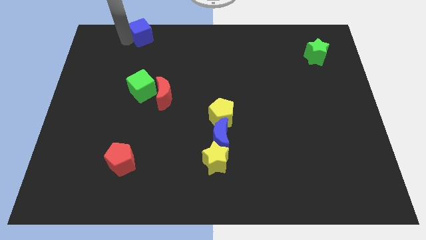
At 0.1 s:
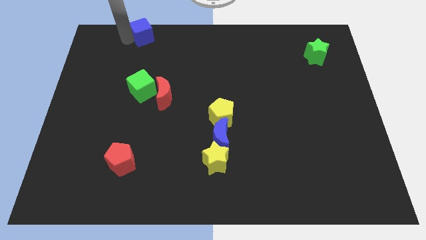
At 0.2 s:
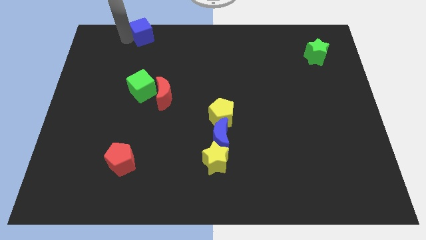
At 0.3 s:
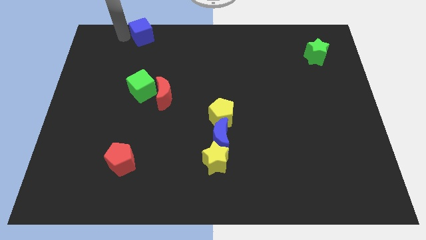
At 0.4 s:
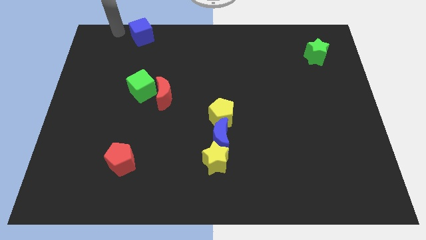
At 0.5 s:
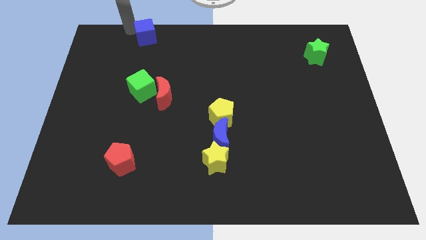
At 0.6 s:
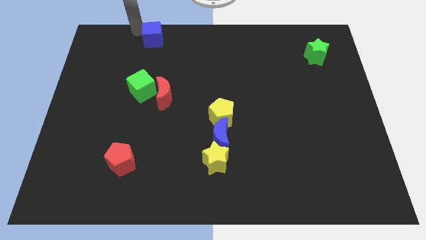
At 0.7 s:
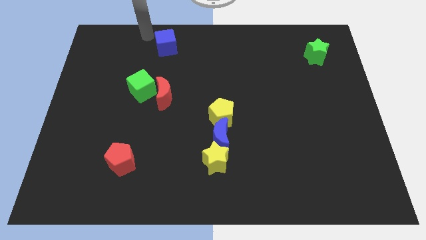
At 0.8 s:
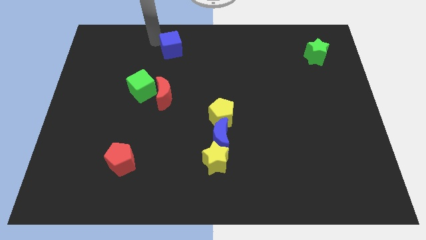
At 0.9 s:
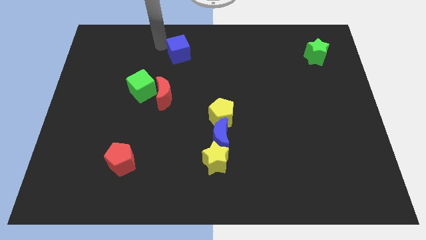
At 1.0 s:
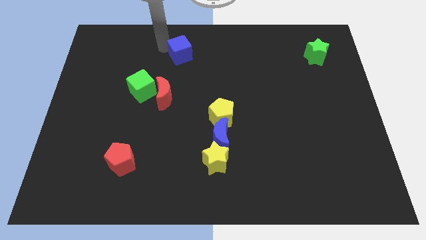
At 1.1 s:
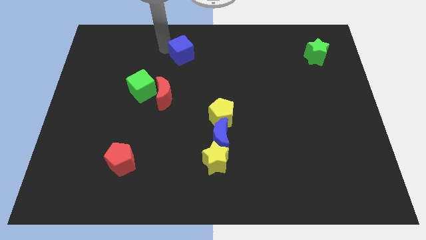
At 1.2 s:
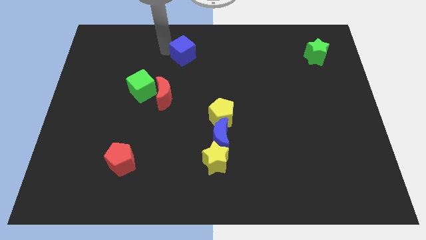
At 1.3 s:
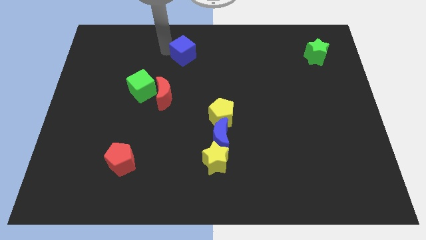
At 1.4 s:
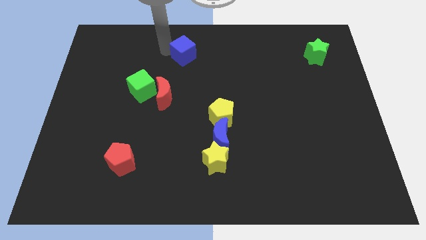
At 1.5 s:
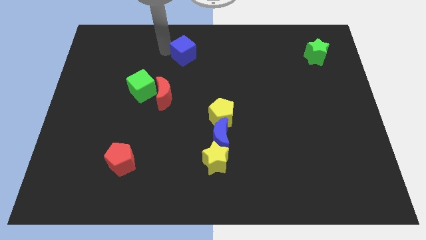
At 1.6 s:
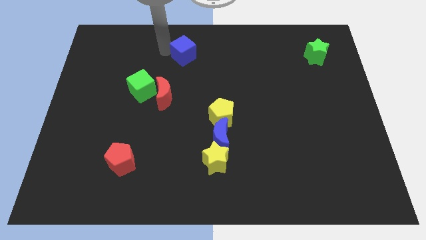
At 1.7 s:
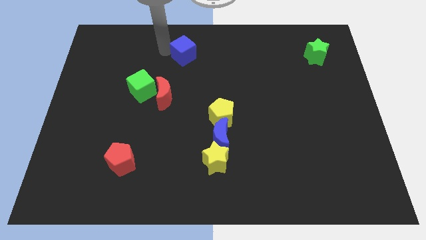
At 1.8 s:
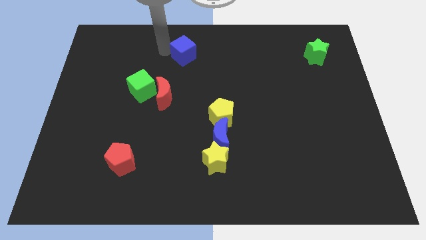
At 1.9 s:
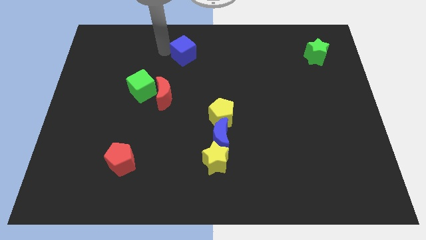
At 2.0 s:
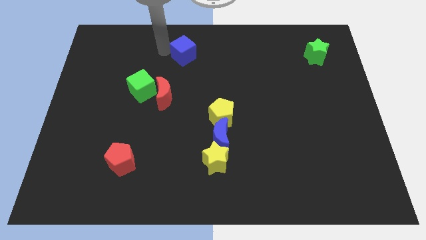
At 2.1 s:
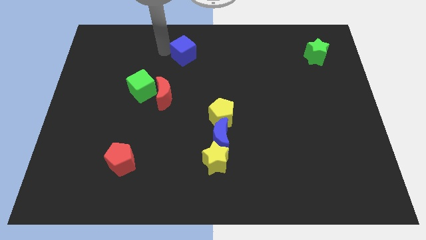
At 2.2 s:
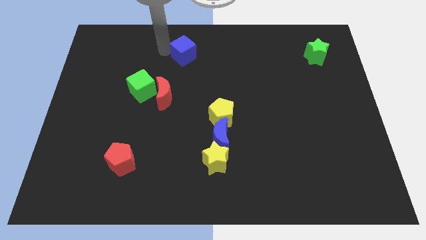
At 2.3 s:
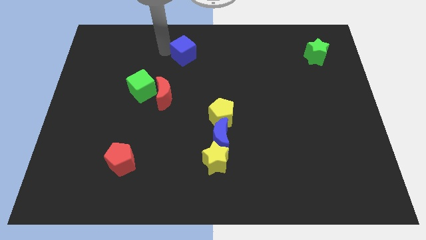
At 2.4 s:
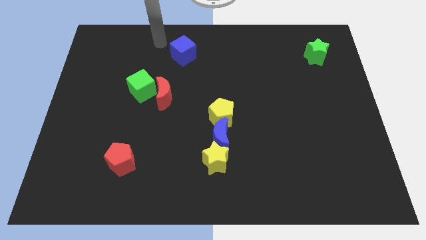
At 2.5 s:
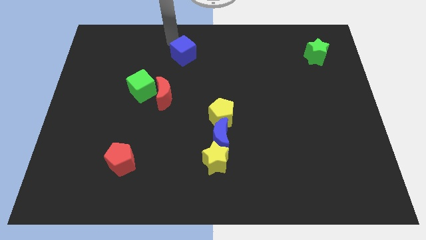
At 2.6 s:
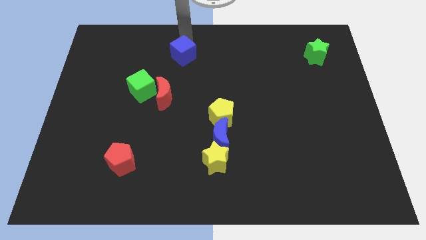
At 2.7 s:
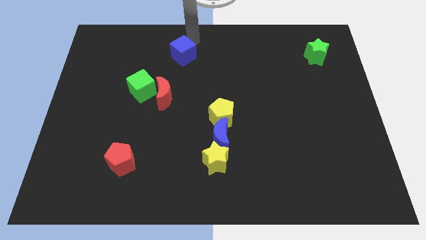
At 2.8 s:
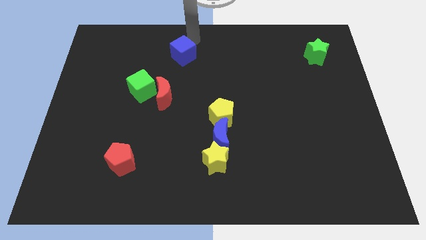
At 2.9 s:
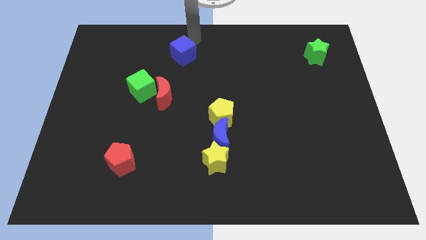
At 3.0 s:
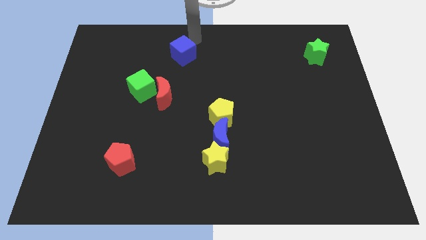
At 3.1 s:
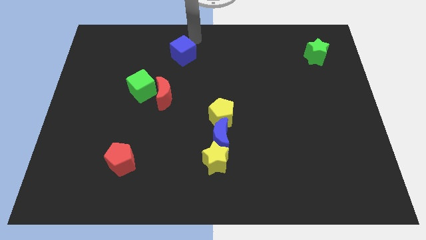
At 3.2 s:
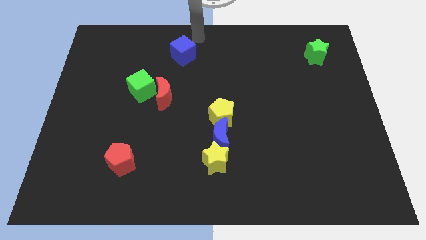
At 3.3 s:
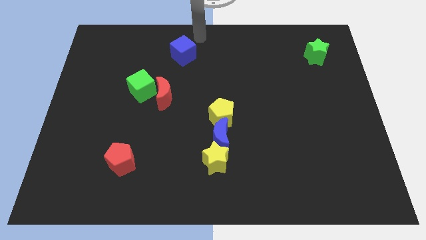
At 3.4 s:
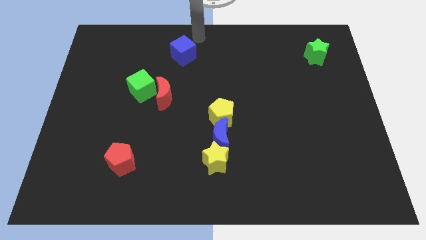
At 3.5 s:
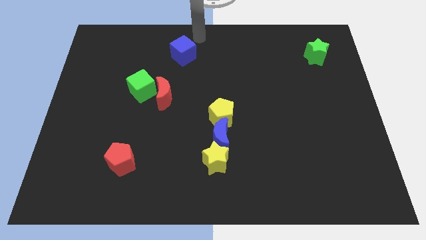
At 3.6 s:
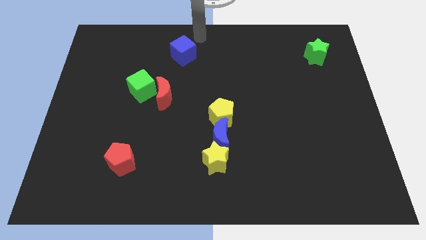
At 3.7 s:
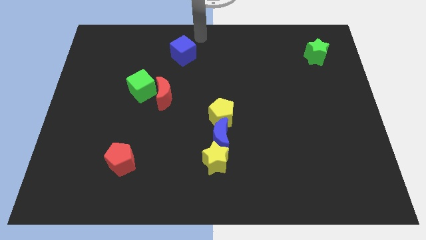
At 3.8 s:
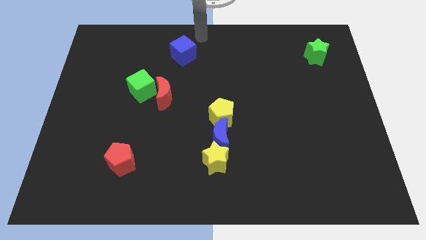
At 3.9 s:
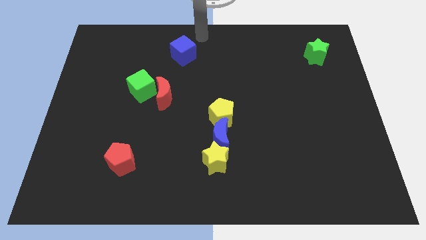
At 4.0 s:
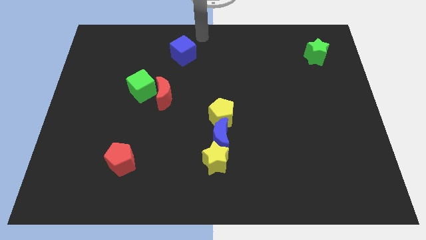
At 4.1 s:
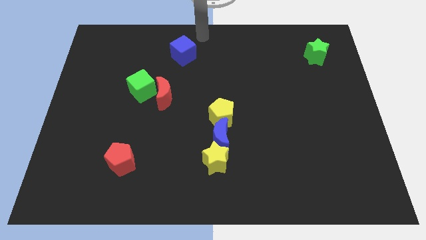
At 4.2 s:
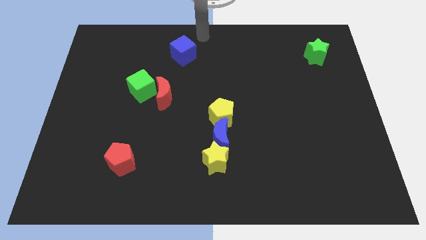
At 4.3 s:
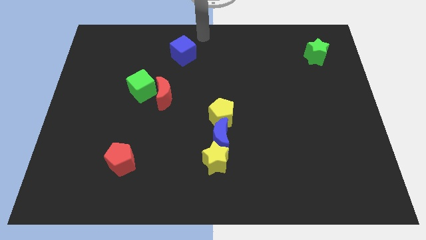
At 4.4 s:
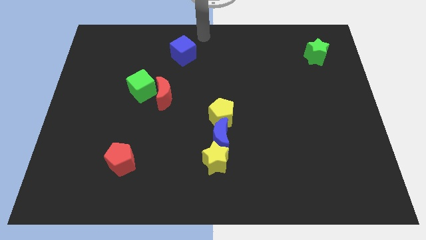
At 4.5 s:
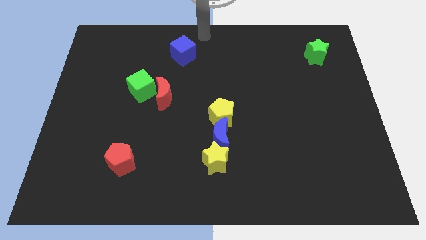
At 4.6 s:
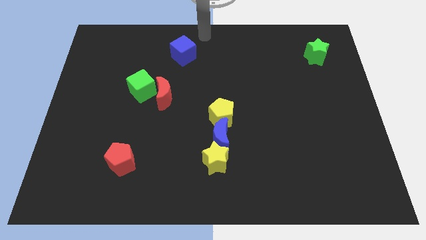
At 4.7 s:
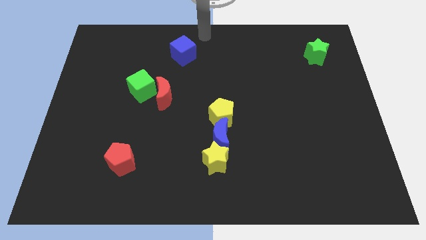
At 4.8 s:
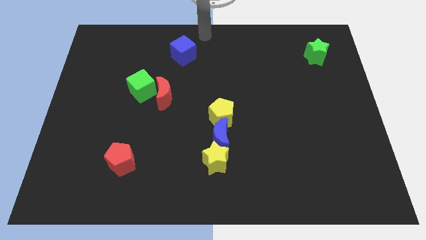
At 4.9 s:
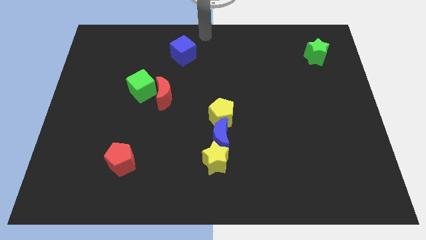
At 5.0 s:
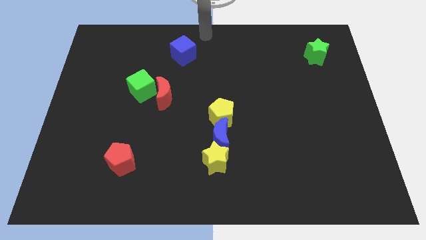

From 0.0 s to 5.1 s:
push the blue cube to the horizontal left side of the green star

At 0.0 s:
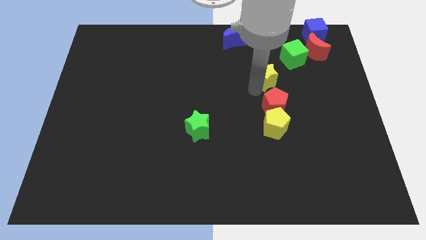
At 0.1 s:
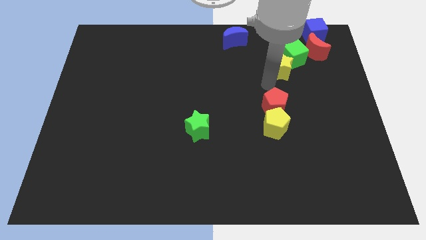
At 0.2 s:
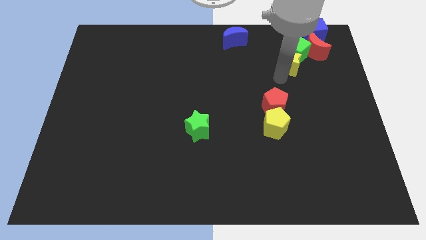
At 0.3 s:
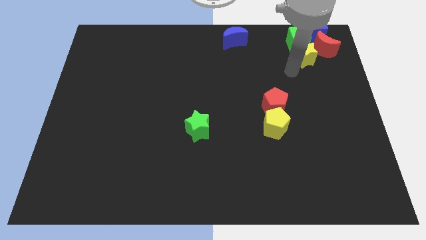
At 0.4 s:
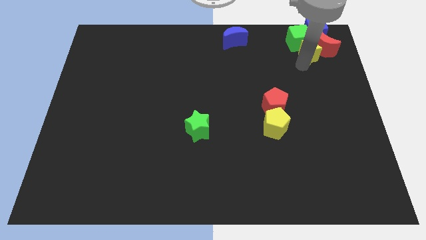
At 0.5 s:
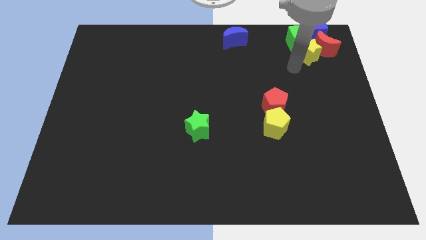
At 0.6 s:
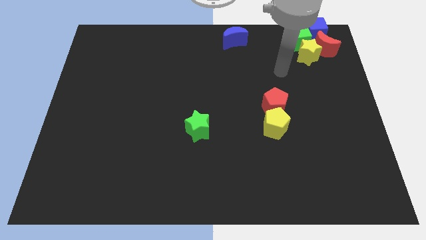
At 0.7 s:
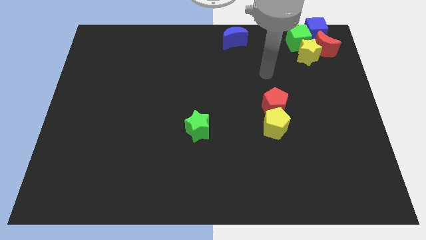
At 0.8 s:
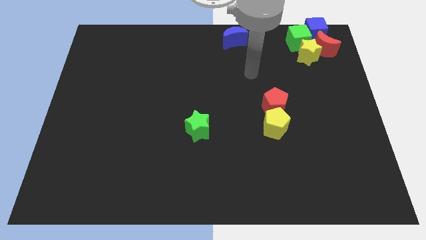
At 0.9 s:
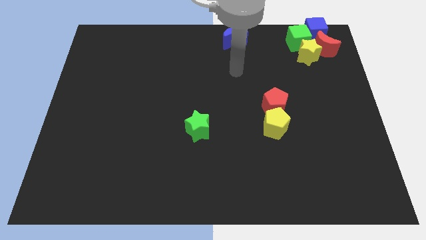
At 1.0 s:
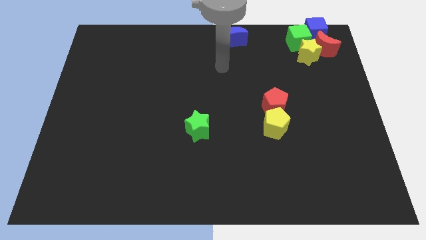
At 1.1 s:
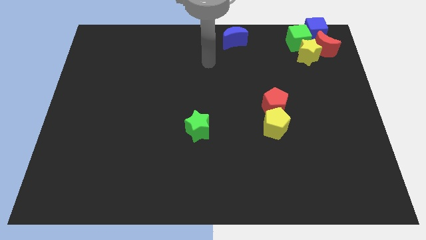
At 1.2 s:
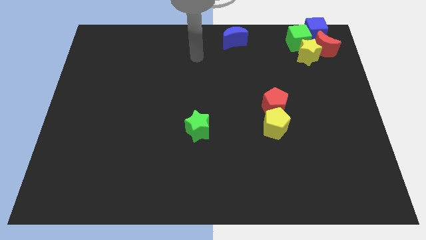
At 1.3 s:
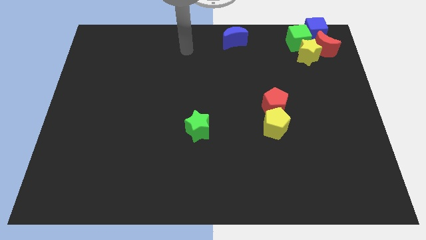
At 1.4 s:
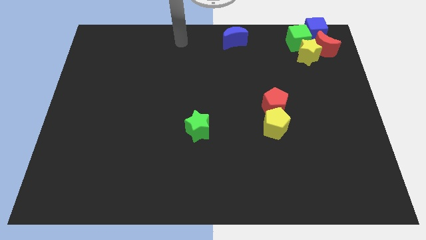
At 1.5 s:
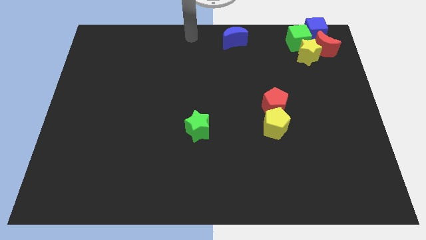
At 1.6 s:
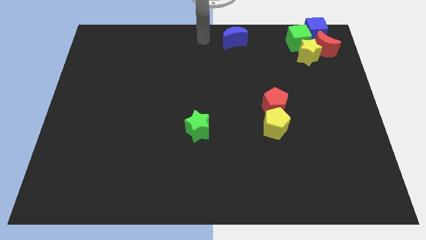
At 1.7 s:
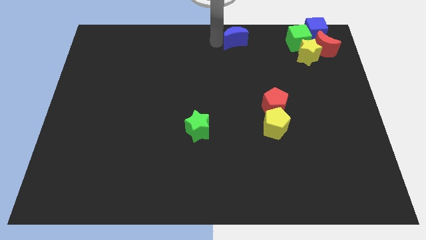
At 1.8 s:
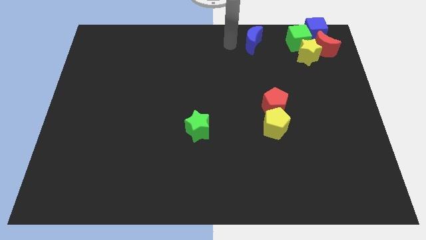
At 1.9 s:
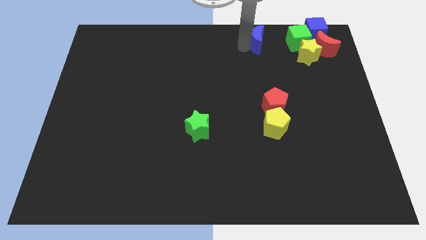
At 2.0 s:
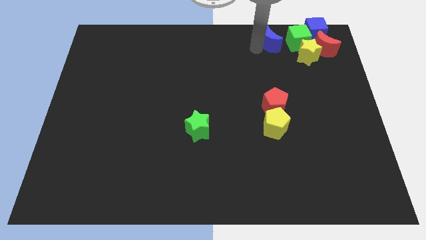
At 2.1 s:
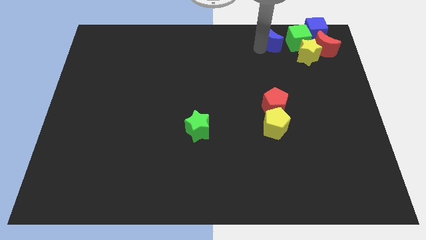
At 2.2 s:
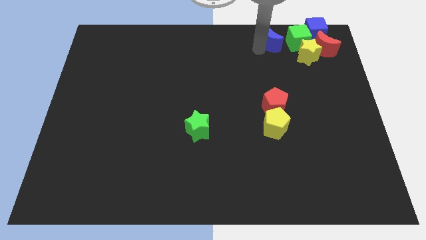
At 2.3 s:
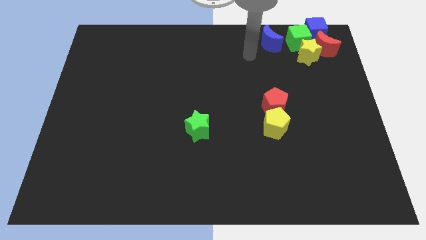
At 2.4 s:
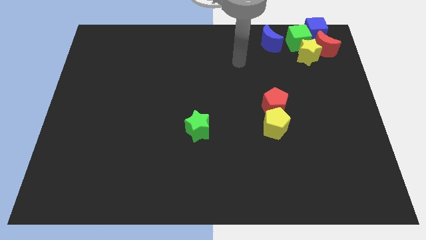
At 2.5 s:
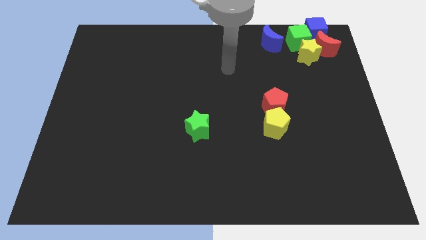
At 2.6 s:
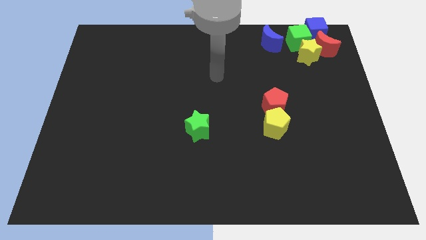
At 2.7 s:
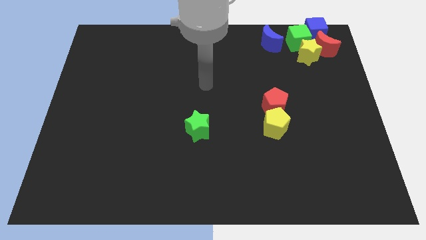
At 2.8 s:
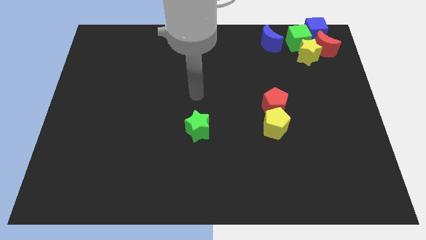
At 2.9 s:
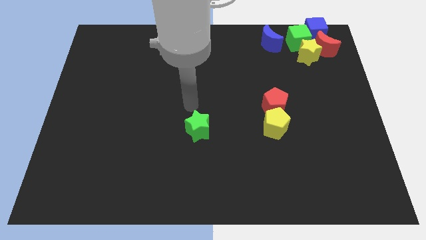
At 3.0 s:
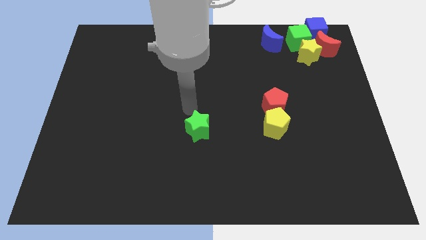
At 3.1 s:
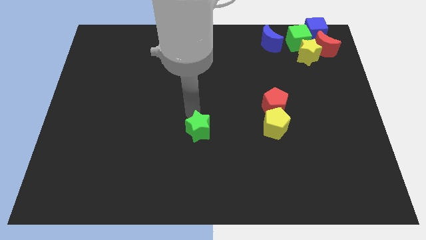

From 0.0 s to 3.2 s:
move the yellow star and blue crescent towards the top right corner

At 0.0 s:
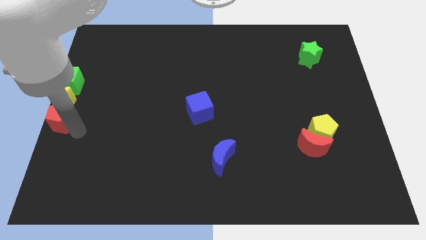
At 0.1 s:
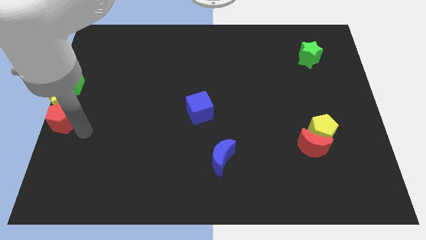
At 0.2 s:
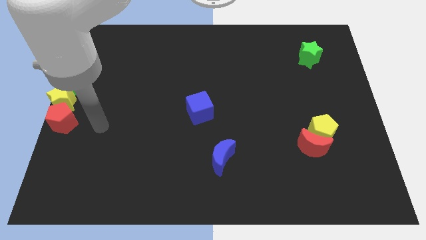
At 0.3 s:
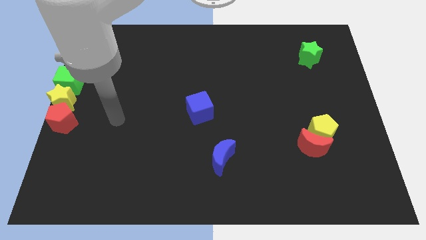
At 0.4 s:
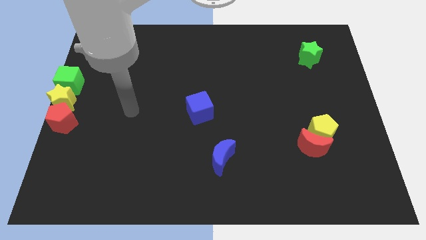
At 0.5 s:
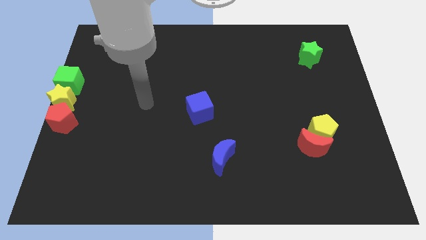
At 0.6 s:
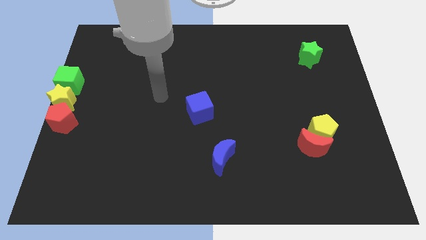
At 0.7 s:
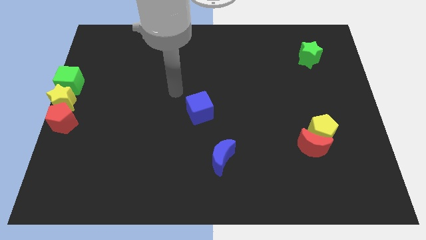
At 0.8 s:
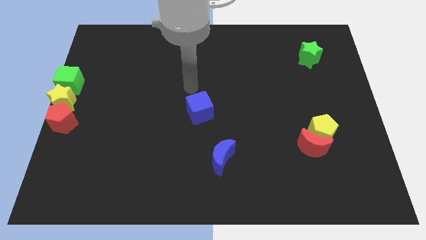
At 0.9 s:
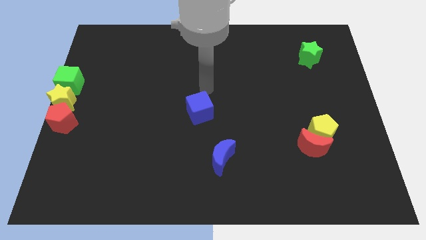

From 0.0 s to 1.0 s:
point your arm at the top of the blue cube
